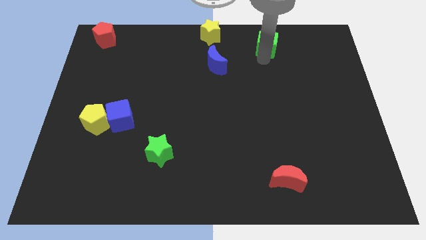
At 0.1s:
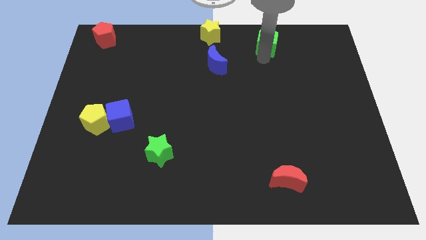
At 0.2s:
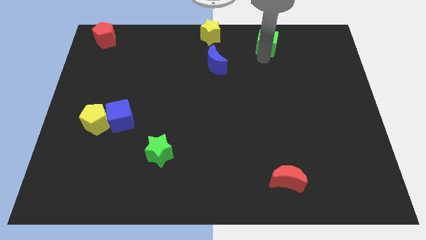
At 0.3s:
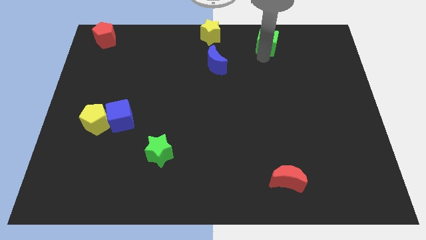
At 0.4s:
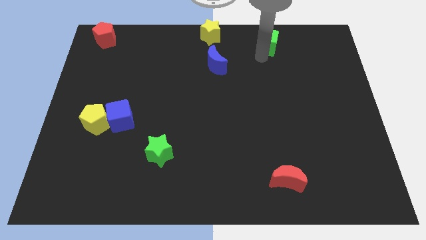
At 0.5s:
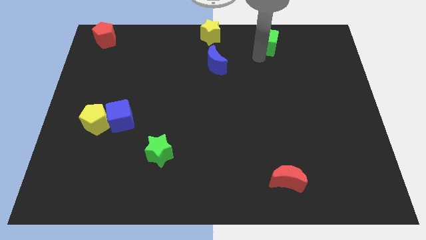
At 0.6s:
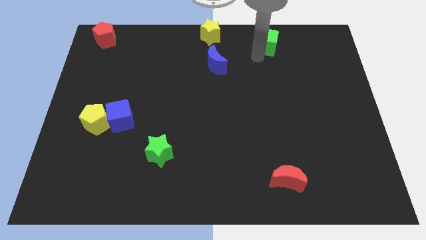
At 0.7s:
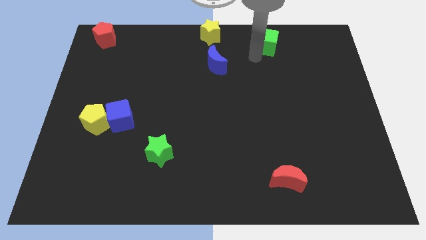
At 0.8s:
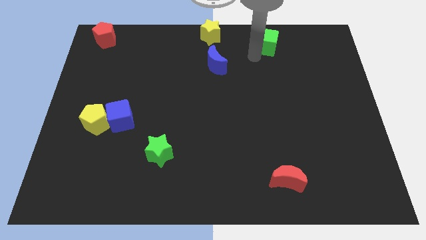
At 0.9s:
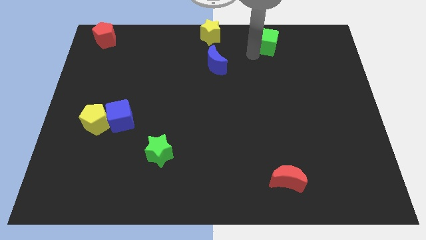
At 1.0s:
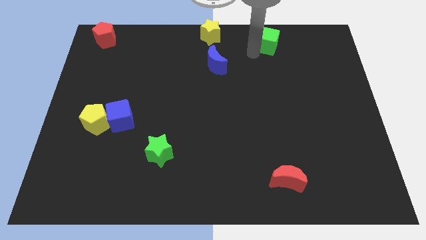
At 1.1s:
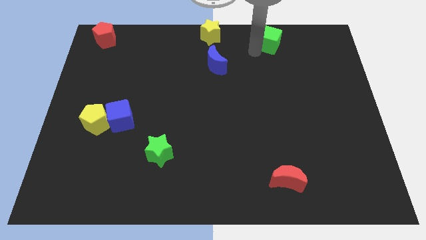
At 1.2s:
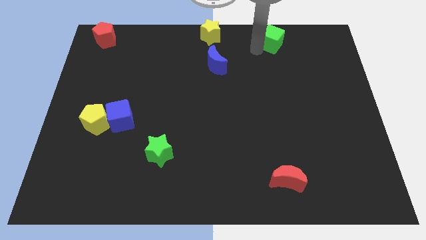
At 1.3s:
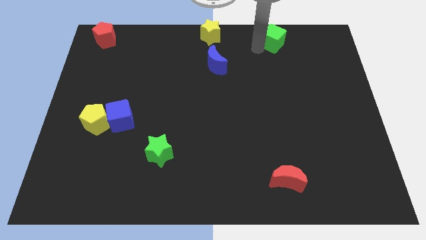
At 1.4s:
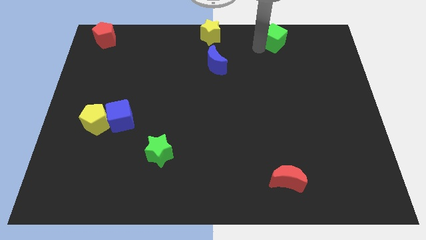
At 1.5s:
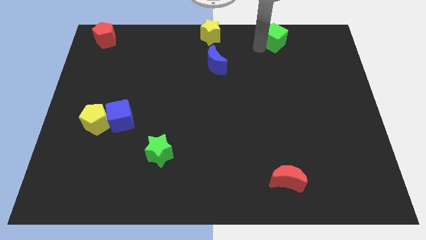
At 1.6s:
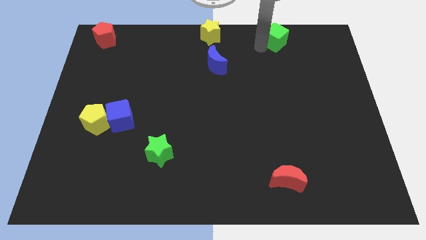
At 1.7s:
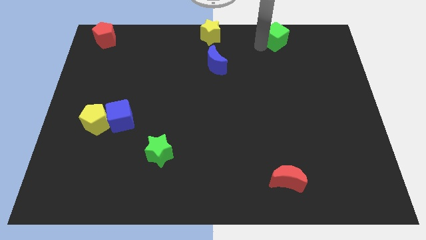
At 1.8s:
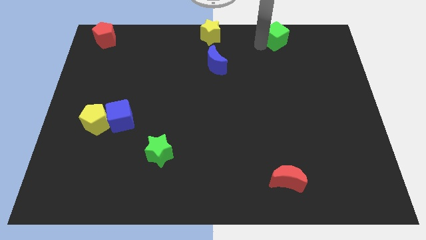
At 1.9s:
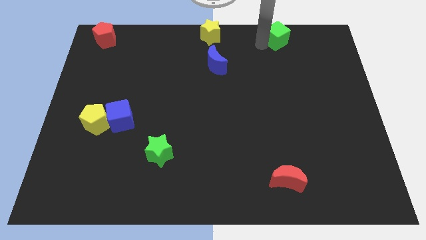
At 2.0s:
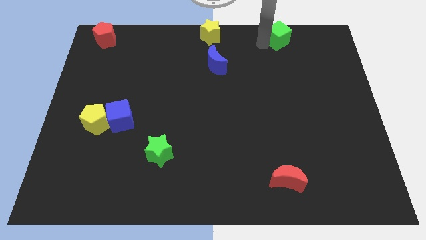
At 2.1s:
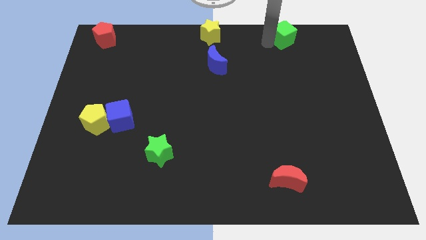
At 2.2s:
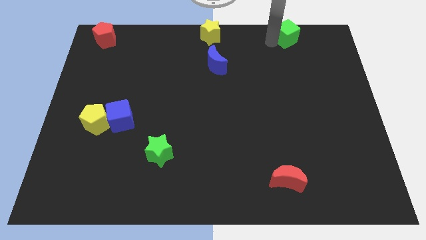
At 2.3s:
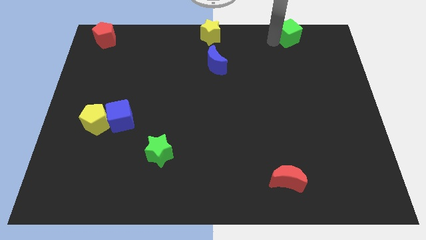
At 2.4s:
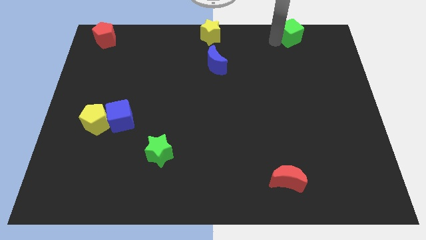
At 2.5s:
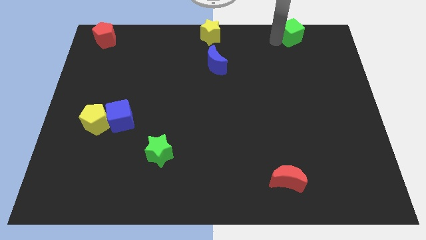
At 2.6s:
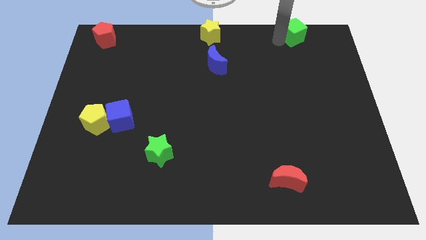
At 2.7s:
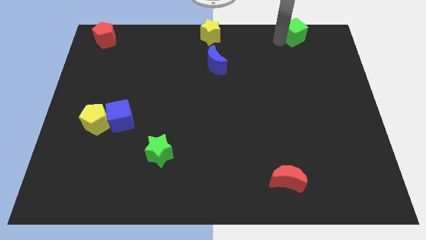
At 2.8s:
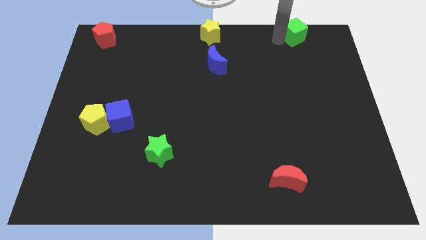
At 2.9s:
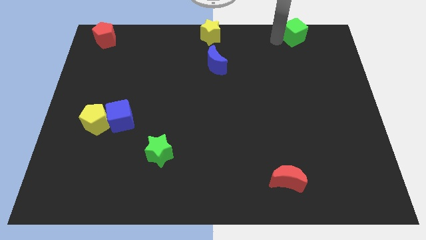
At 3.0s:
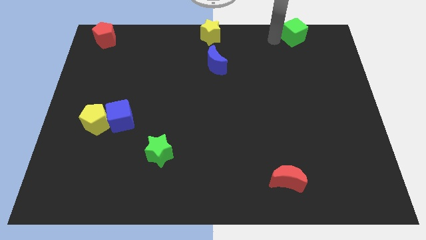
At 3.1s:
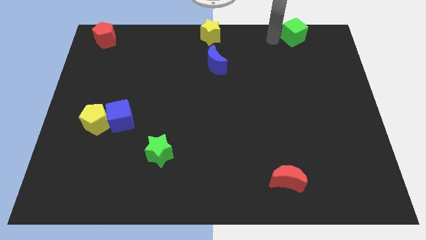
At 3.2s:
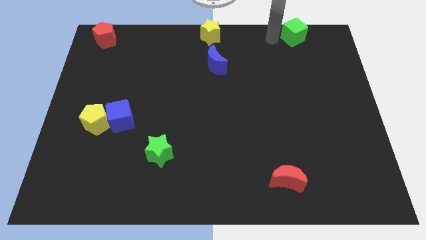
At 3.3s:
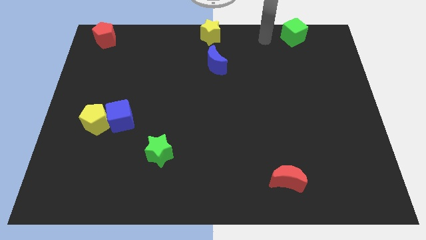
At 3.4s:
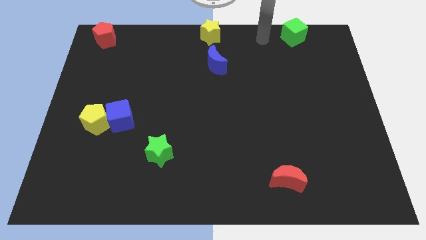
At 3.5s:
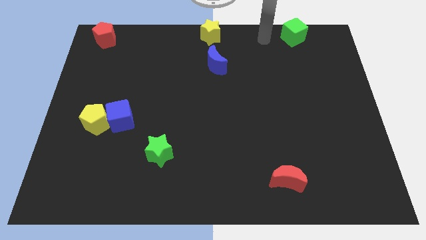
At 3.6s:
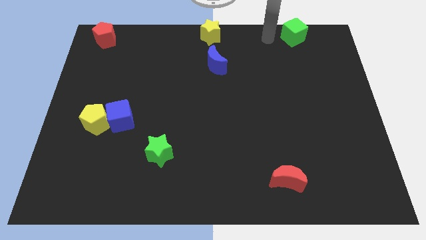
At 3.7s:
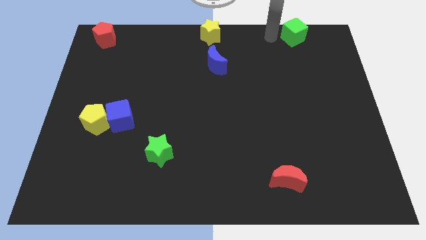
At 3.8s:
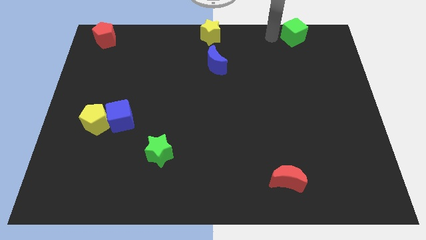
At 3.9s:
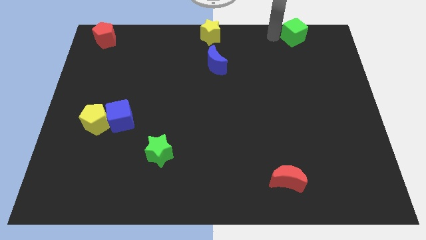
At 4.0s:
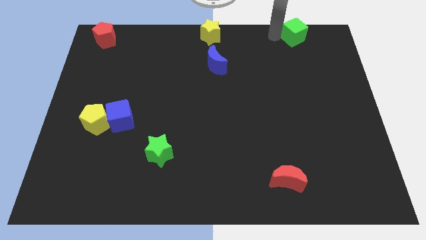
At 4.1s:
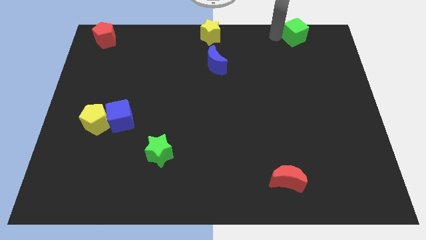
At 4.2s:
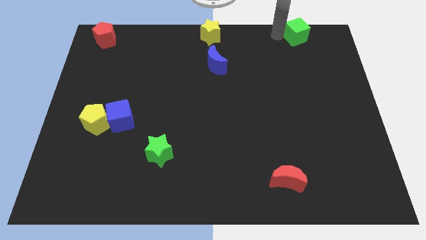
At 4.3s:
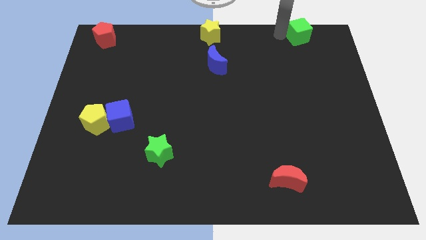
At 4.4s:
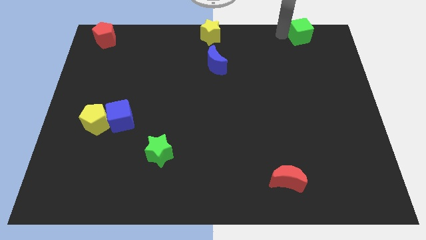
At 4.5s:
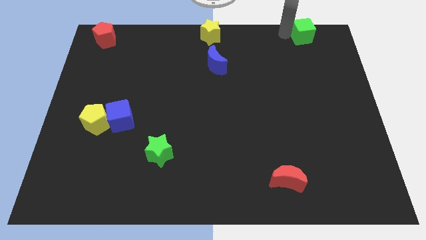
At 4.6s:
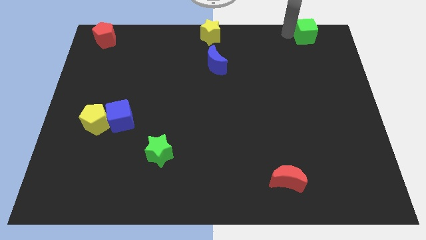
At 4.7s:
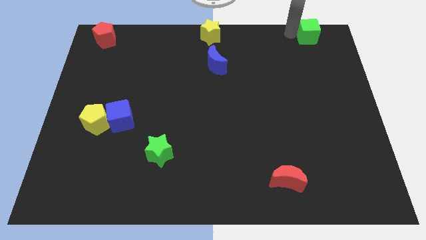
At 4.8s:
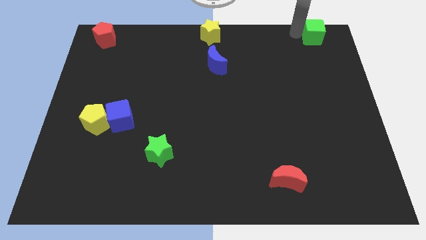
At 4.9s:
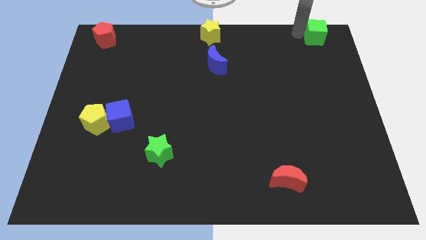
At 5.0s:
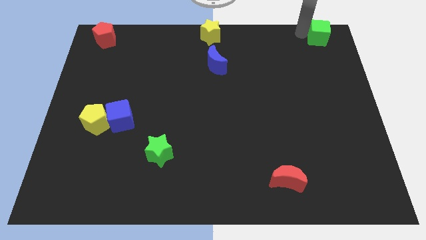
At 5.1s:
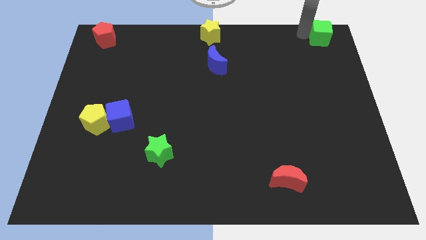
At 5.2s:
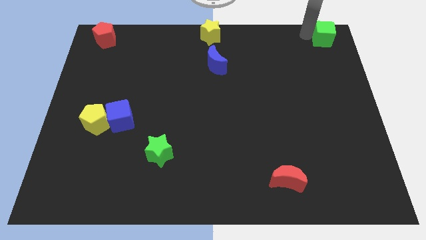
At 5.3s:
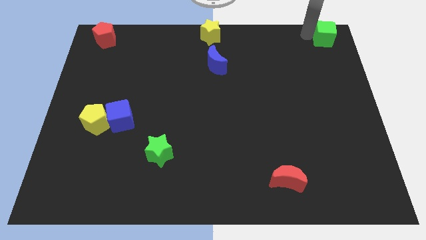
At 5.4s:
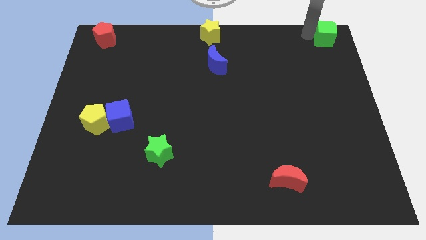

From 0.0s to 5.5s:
push the green cube towards the top right corner of the board

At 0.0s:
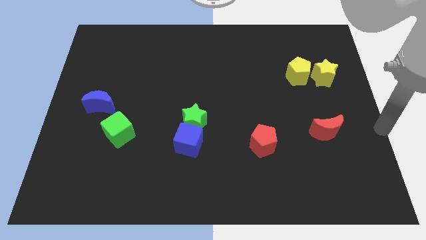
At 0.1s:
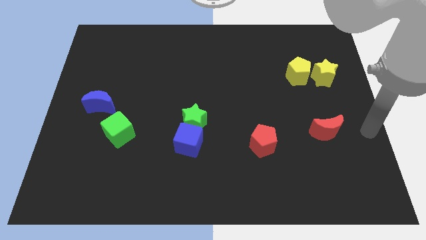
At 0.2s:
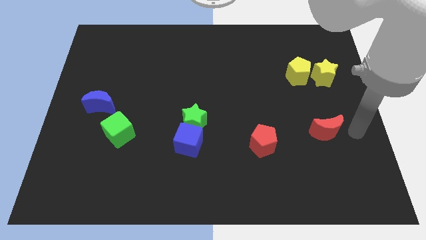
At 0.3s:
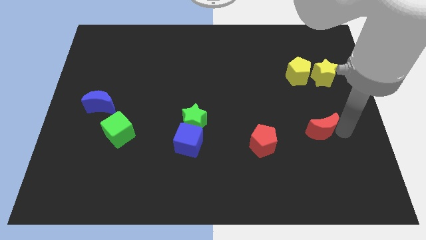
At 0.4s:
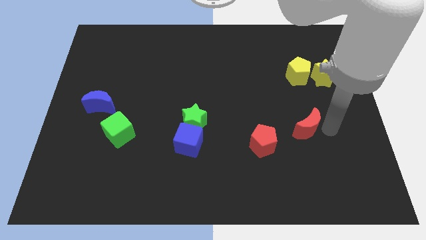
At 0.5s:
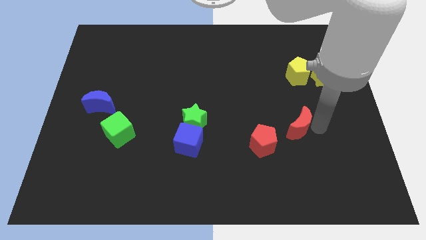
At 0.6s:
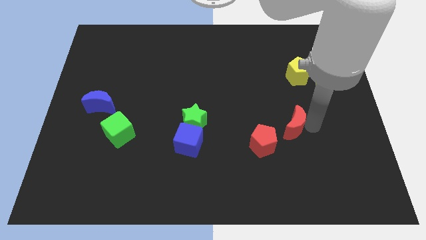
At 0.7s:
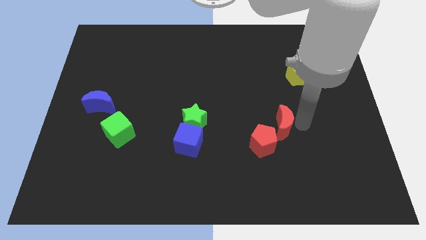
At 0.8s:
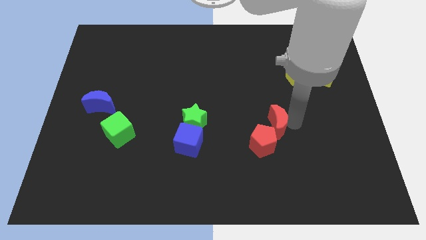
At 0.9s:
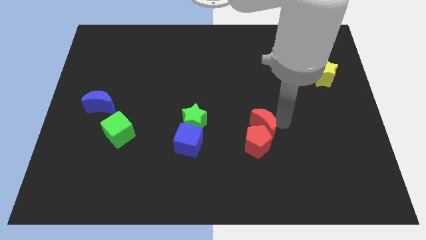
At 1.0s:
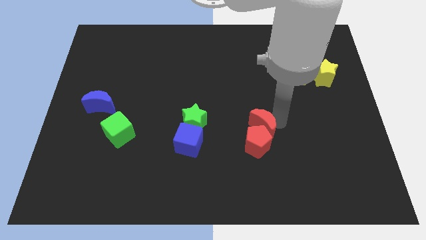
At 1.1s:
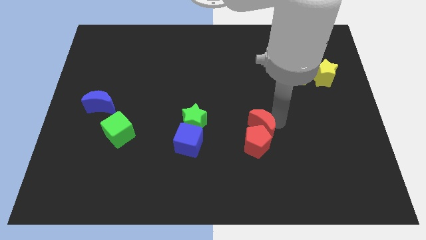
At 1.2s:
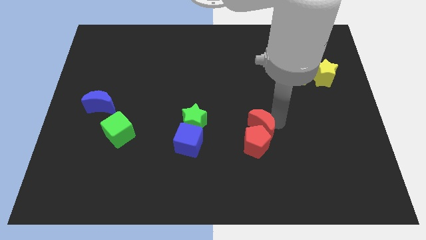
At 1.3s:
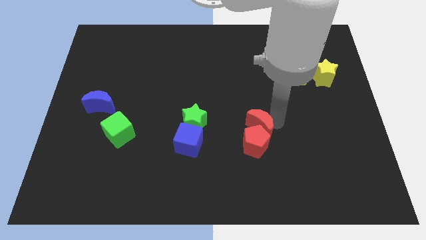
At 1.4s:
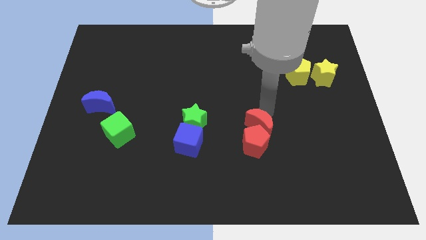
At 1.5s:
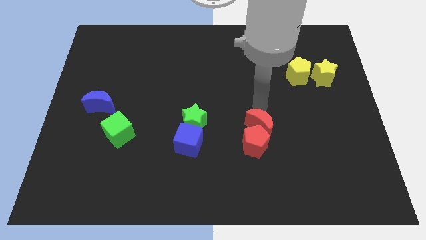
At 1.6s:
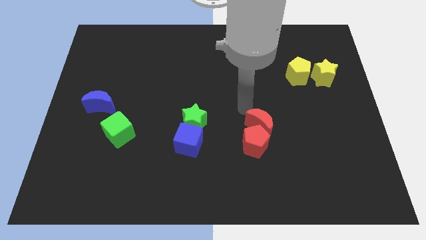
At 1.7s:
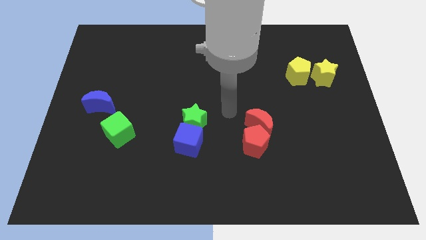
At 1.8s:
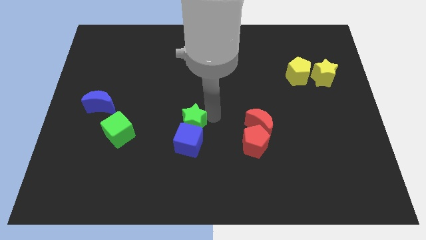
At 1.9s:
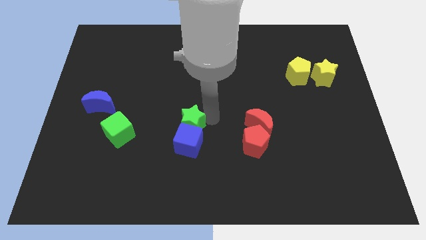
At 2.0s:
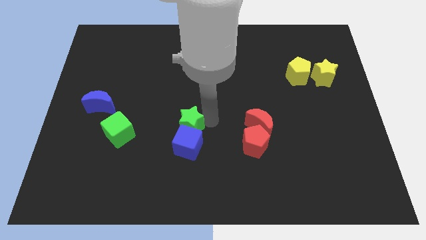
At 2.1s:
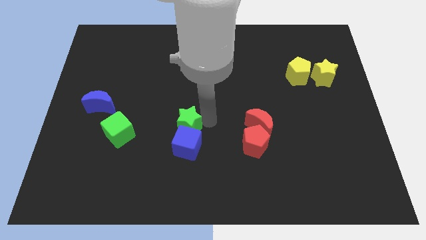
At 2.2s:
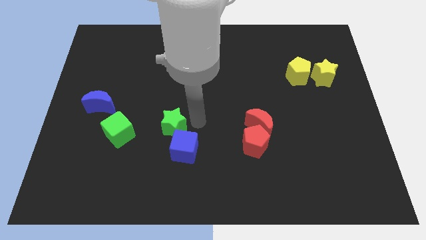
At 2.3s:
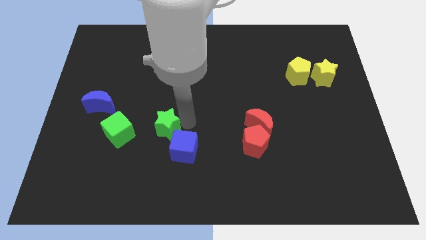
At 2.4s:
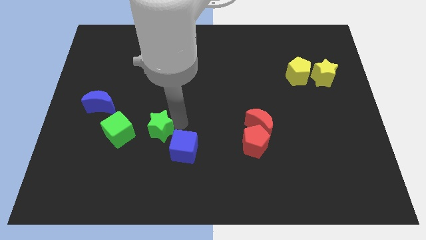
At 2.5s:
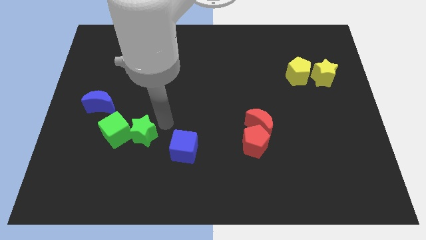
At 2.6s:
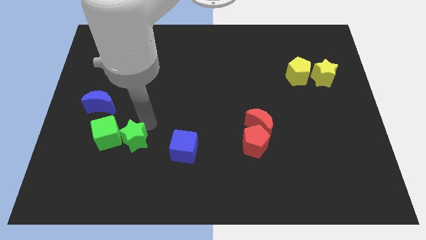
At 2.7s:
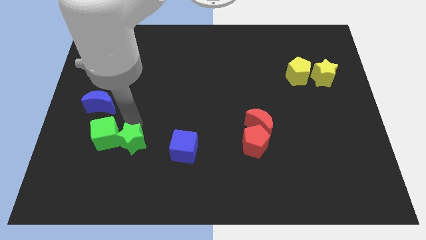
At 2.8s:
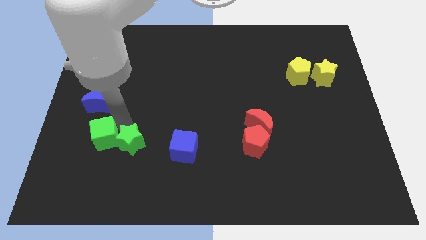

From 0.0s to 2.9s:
push green star into green cube

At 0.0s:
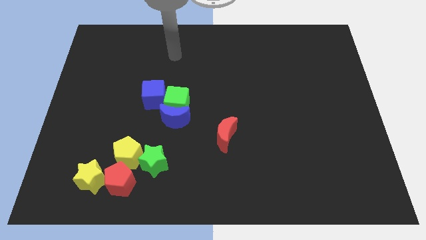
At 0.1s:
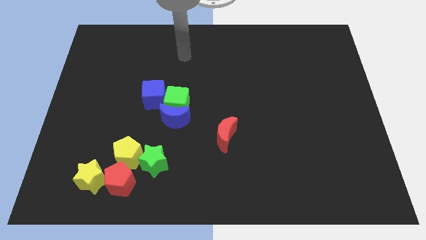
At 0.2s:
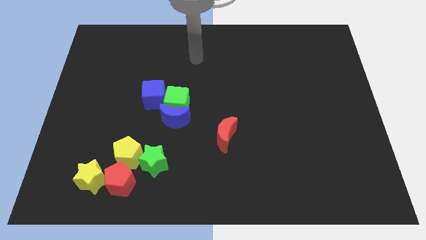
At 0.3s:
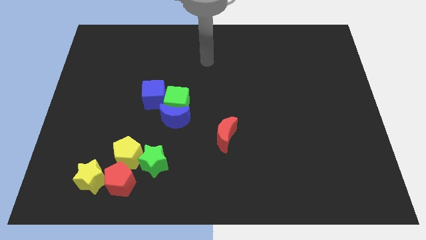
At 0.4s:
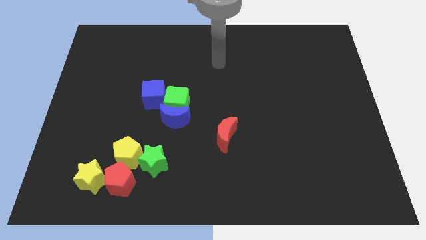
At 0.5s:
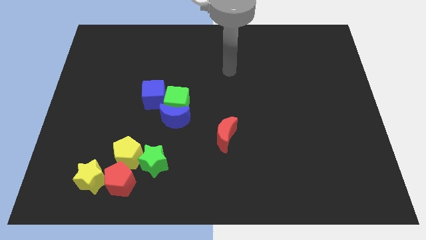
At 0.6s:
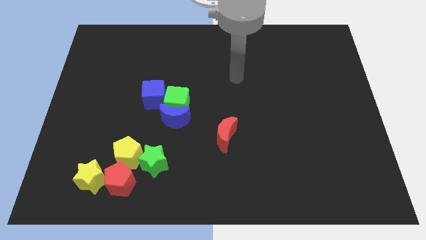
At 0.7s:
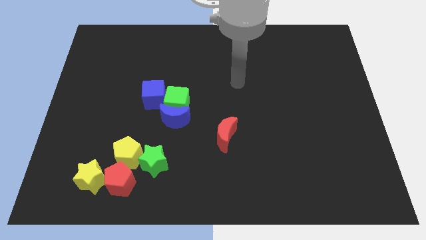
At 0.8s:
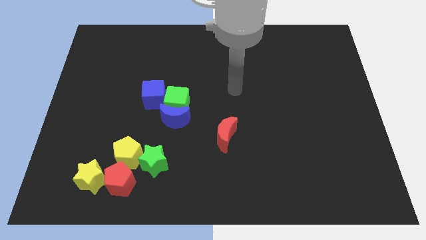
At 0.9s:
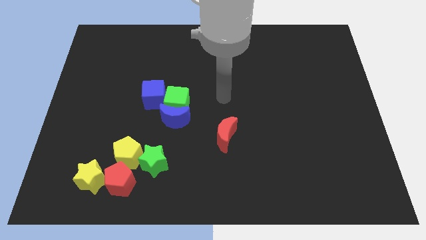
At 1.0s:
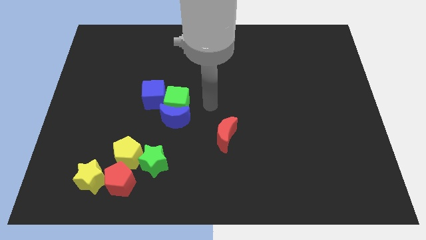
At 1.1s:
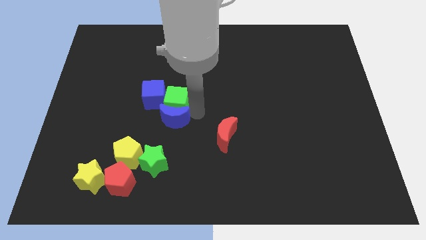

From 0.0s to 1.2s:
place the hand close to the right of green cube and blue crescent
